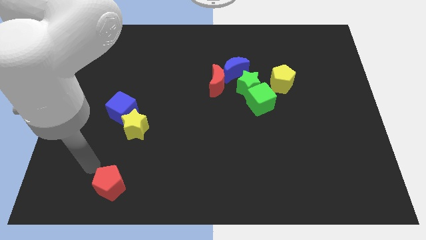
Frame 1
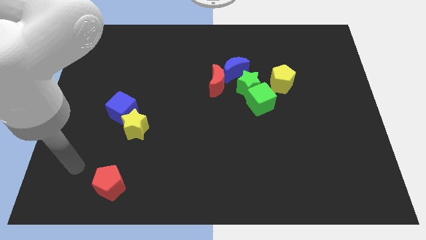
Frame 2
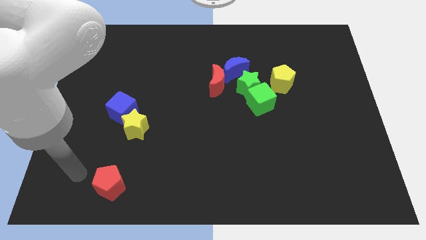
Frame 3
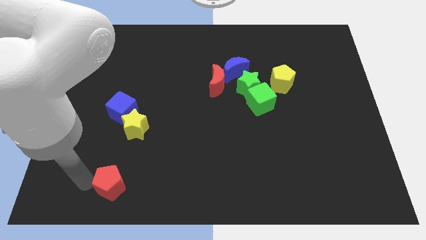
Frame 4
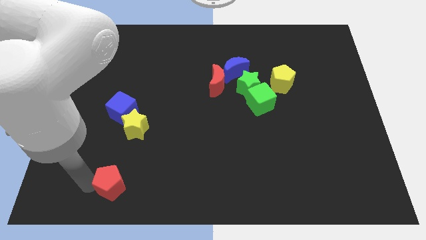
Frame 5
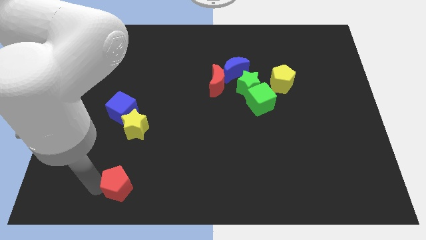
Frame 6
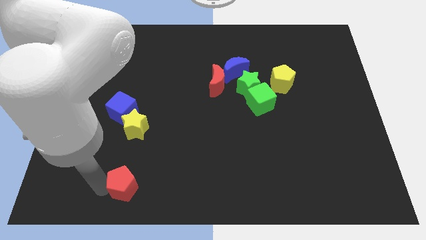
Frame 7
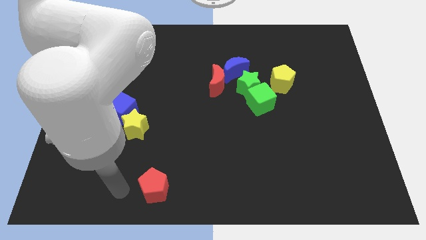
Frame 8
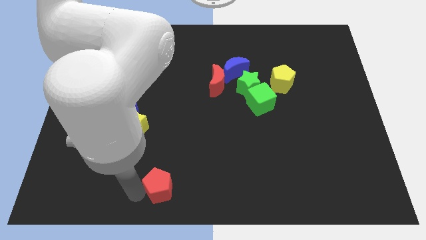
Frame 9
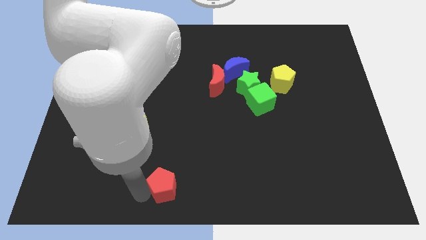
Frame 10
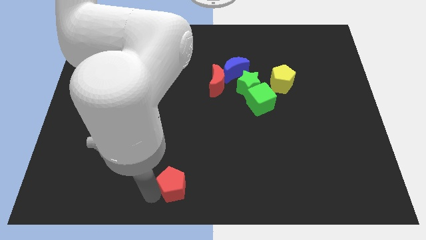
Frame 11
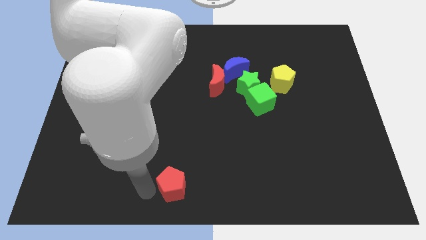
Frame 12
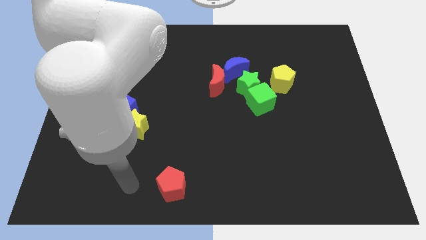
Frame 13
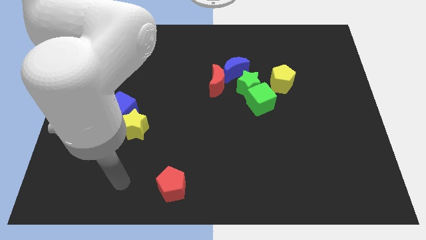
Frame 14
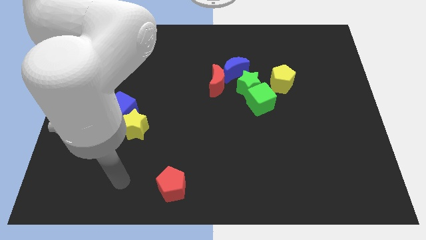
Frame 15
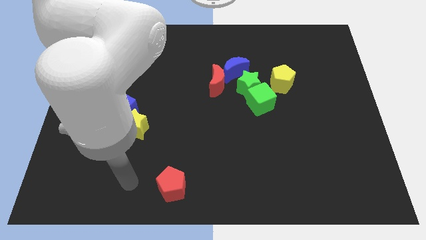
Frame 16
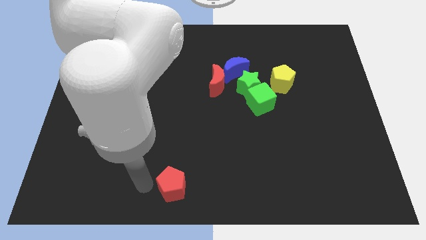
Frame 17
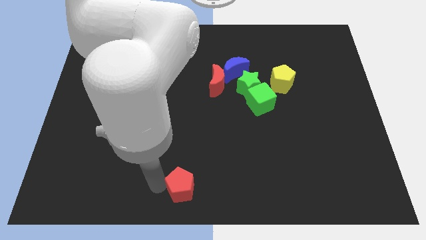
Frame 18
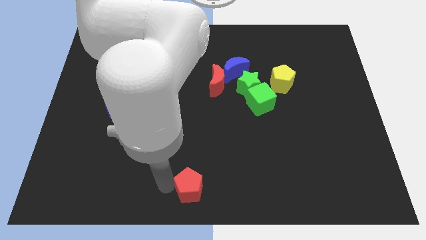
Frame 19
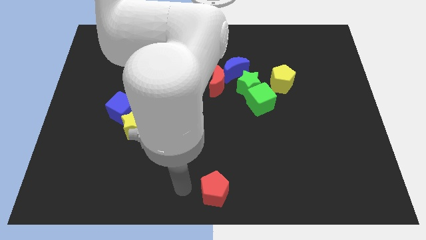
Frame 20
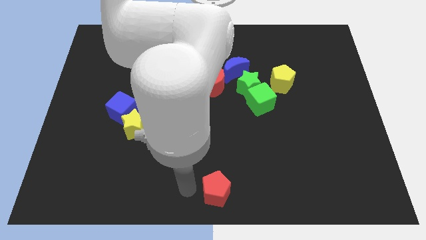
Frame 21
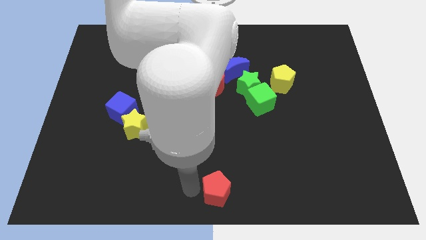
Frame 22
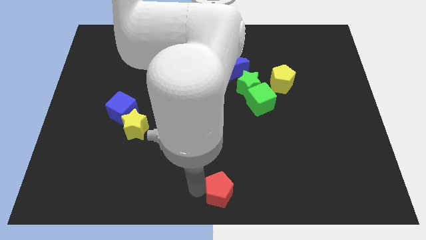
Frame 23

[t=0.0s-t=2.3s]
place the red pentagon at the bottom center of the board

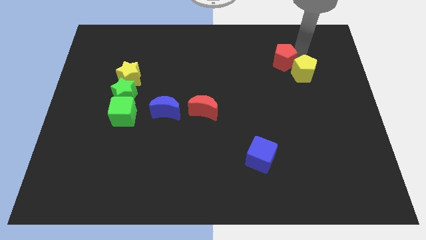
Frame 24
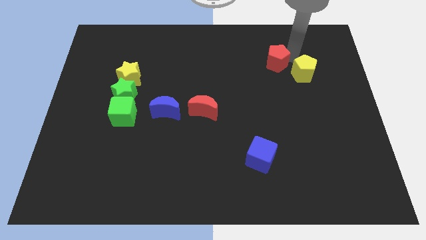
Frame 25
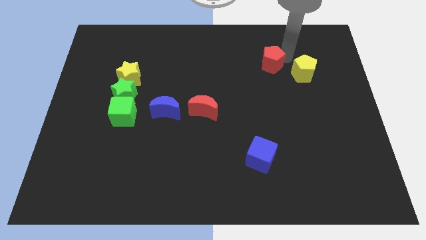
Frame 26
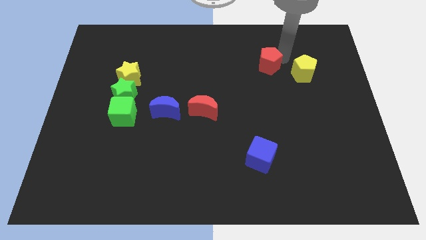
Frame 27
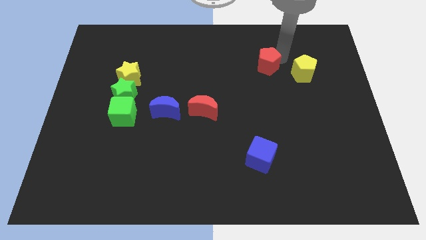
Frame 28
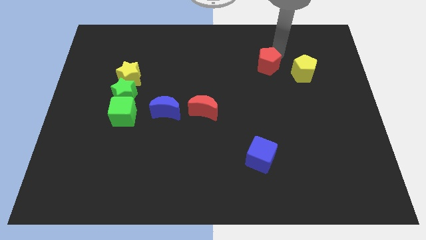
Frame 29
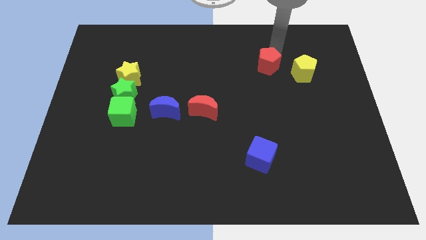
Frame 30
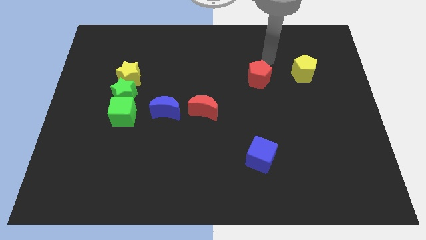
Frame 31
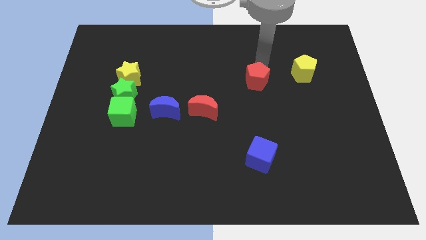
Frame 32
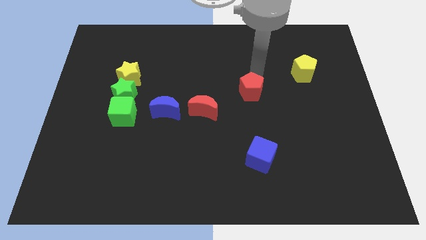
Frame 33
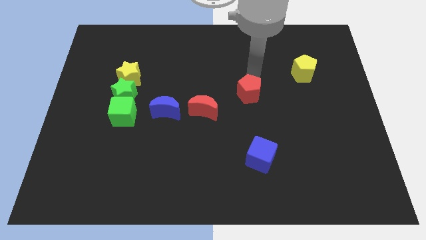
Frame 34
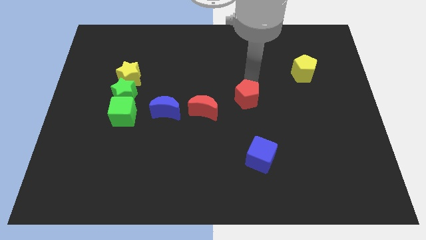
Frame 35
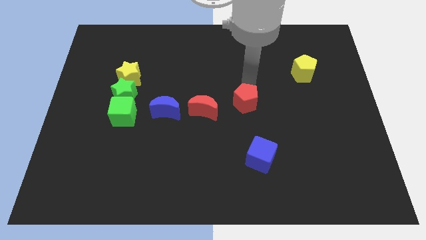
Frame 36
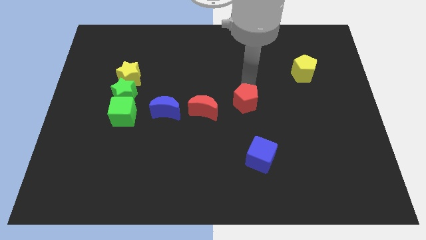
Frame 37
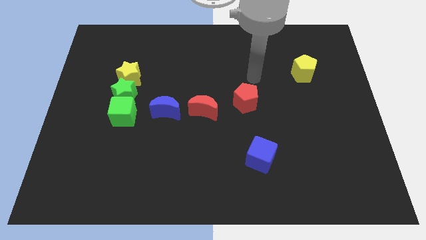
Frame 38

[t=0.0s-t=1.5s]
place the red pentagon right to the red crescent

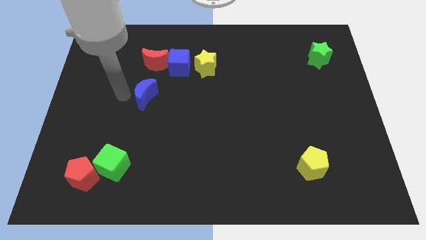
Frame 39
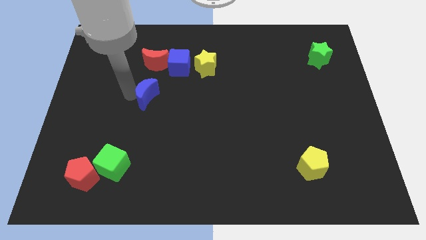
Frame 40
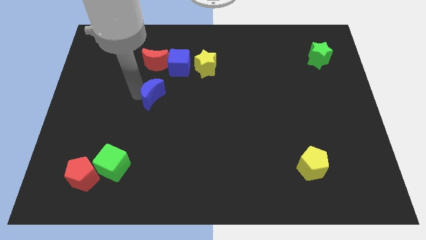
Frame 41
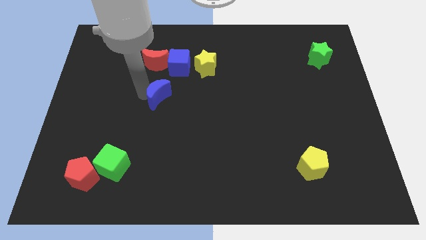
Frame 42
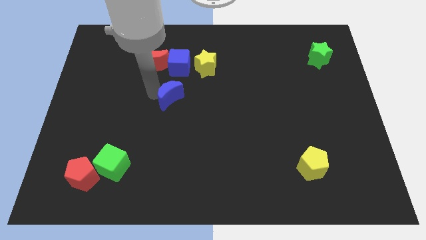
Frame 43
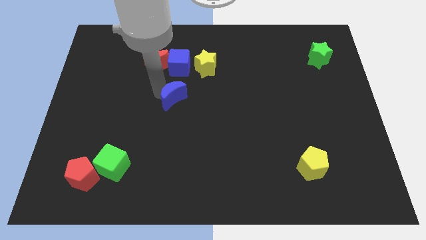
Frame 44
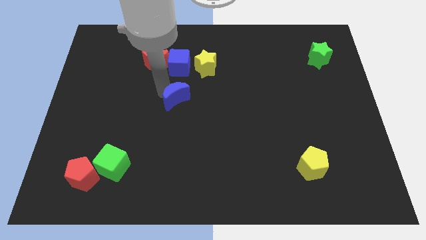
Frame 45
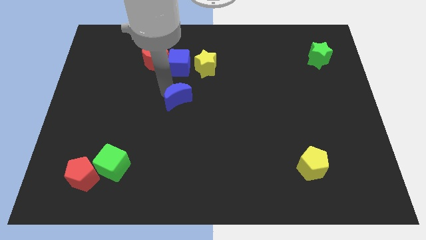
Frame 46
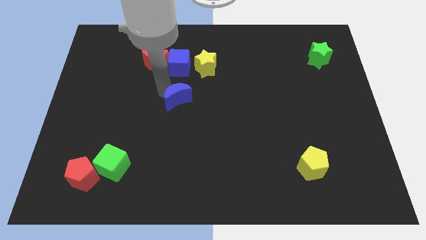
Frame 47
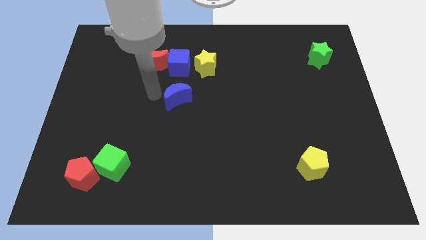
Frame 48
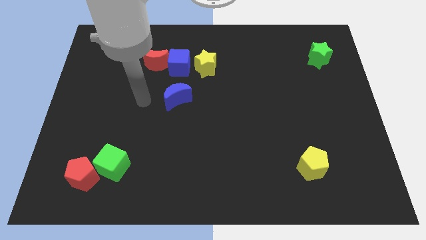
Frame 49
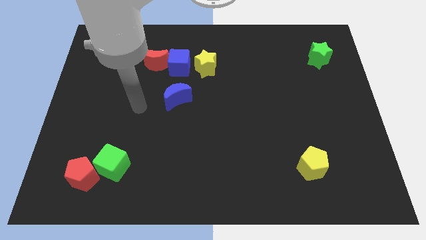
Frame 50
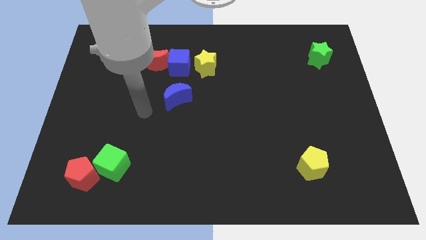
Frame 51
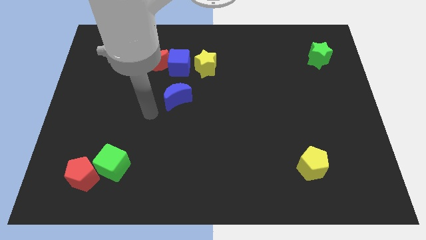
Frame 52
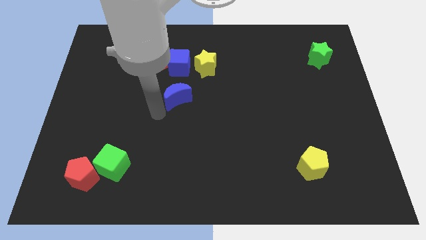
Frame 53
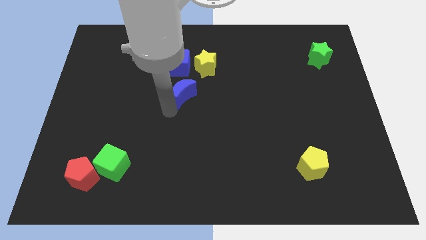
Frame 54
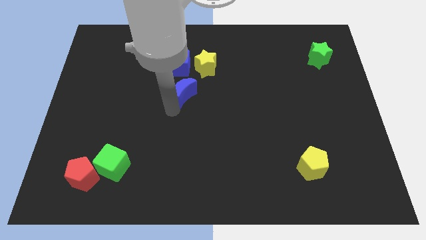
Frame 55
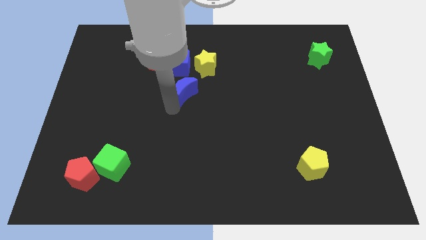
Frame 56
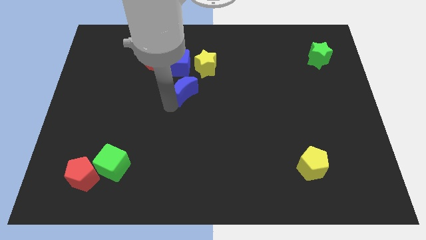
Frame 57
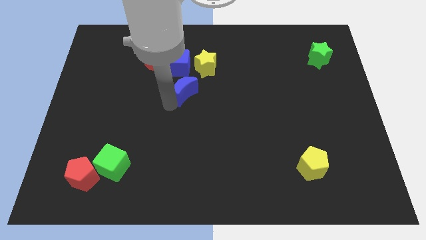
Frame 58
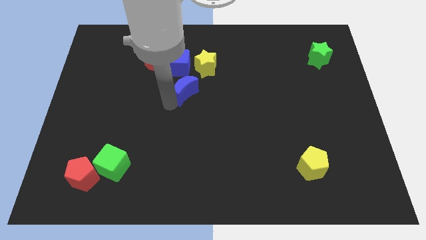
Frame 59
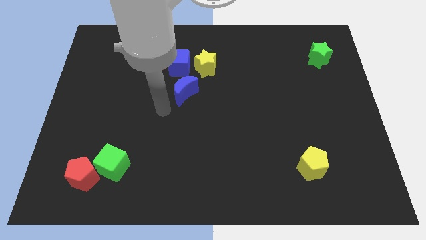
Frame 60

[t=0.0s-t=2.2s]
move the blue crescent towards down to the blue cube

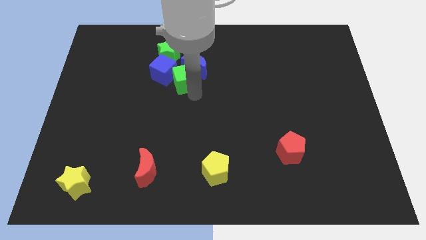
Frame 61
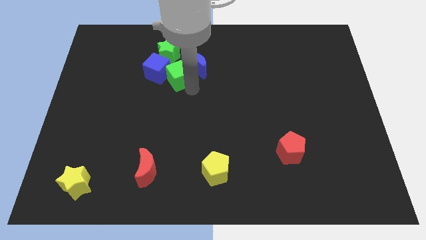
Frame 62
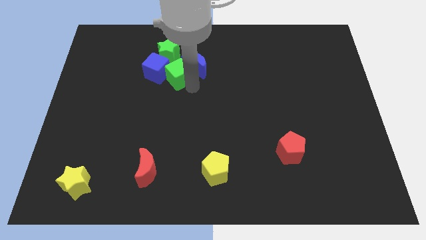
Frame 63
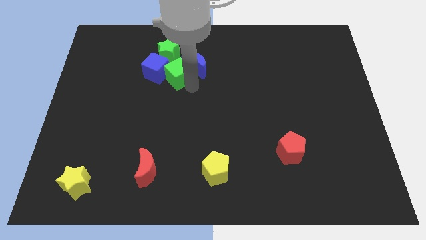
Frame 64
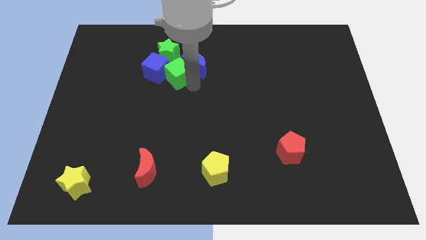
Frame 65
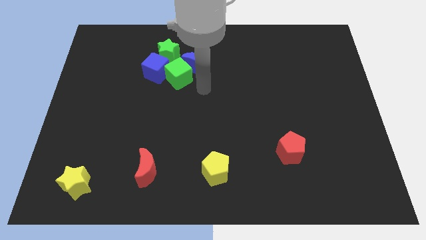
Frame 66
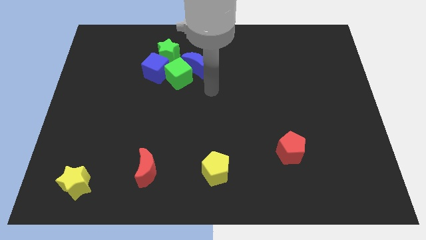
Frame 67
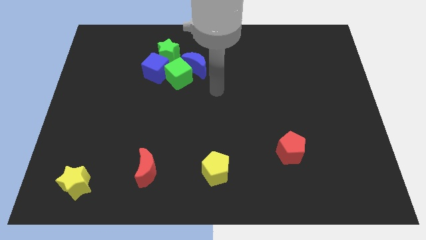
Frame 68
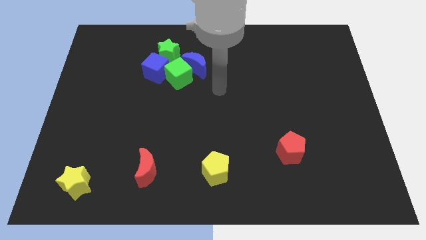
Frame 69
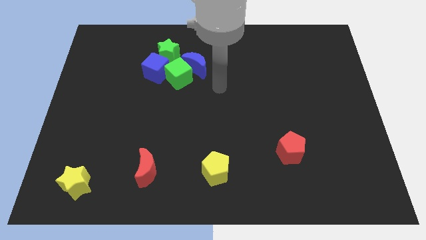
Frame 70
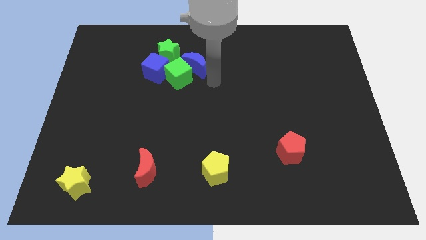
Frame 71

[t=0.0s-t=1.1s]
move the blue cube to place it in between the two blue blocks

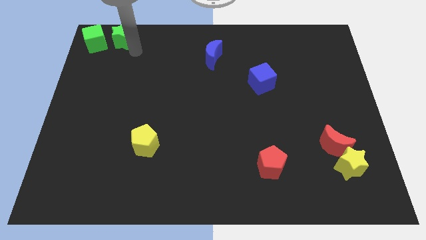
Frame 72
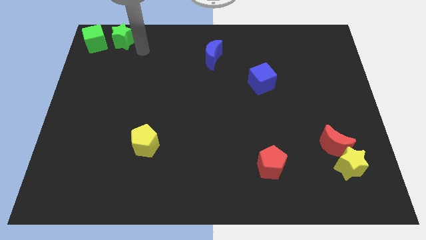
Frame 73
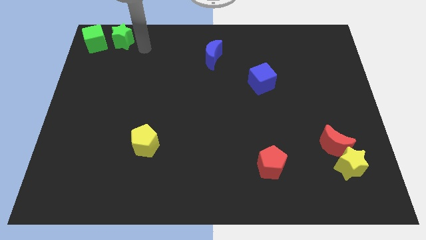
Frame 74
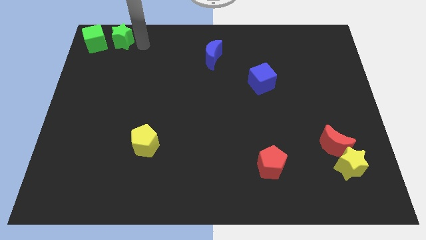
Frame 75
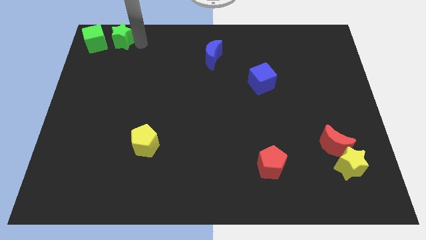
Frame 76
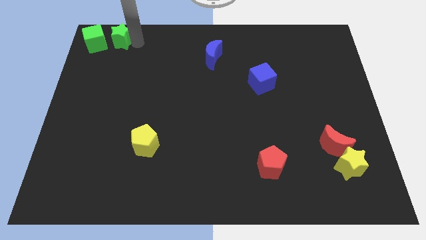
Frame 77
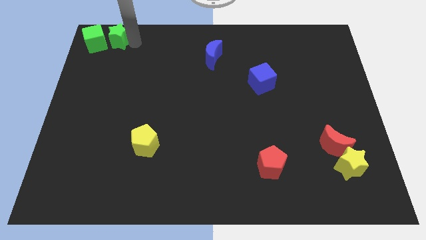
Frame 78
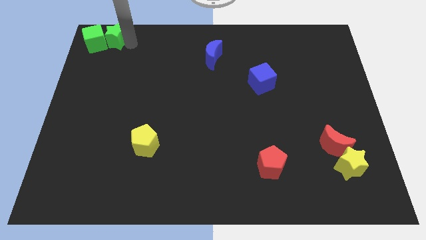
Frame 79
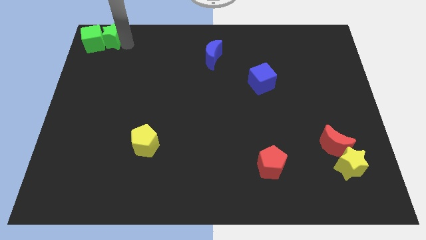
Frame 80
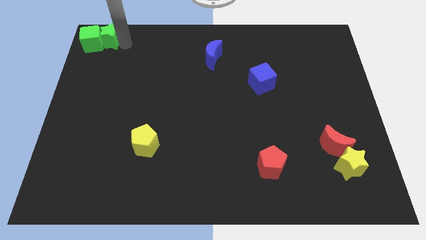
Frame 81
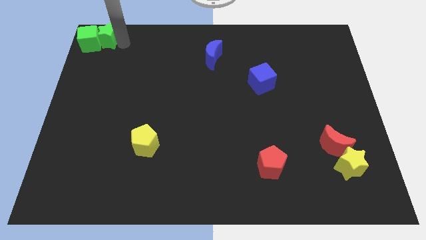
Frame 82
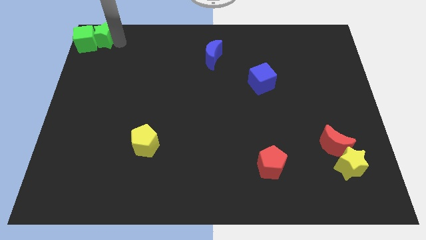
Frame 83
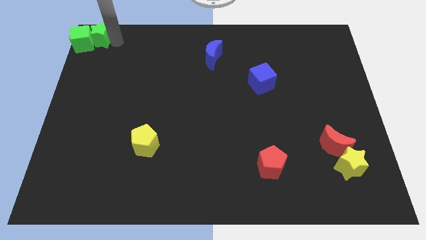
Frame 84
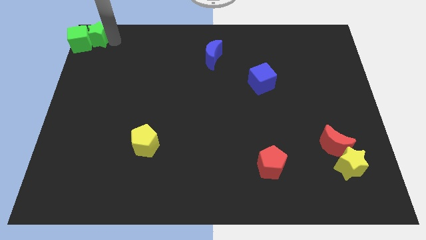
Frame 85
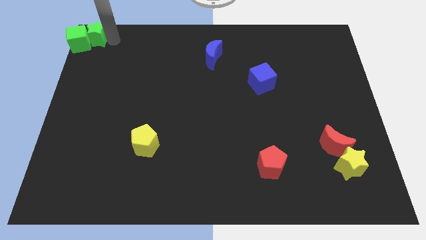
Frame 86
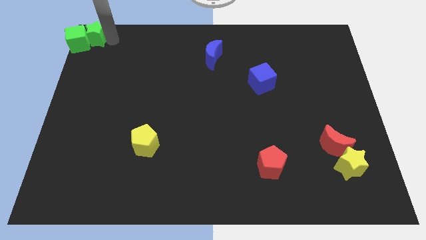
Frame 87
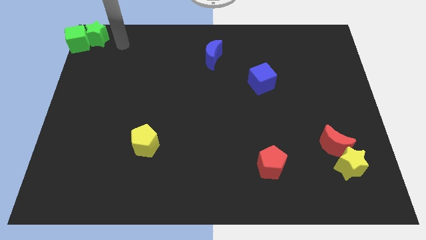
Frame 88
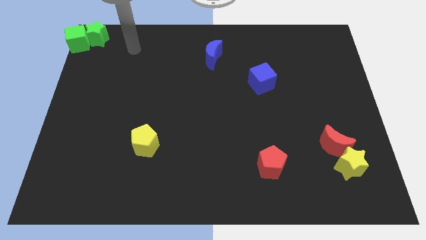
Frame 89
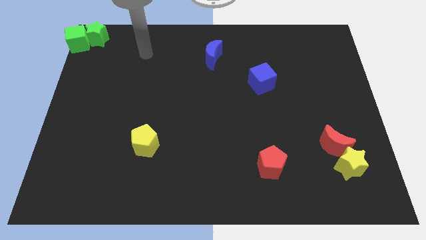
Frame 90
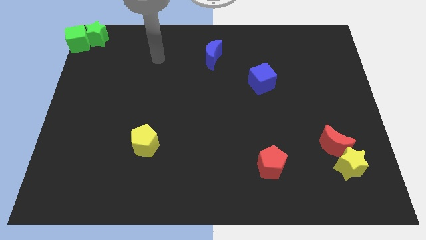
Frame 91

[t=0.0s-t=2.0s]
move the green star into the green cube
